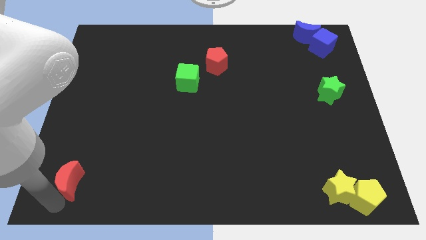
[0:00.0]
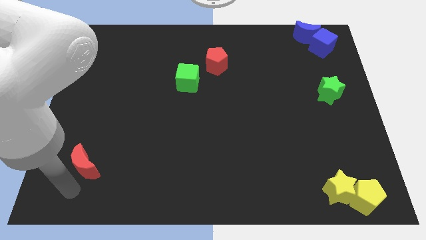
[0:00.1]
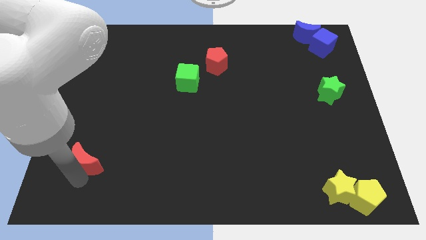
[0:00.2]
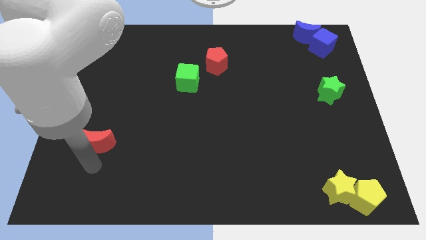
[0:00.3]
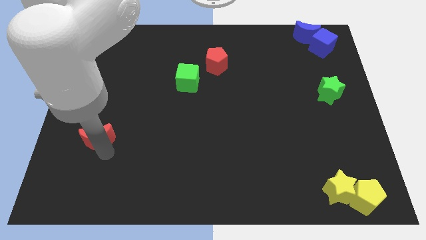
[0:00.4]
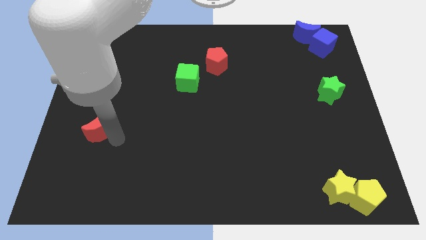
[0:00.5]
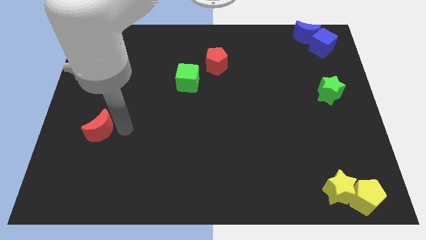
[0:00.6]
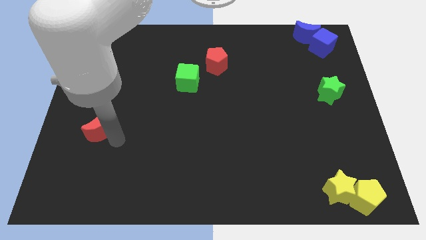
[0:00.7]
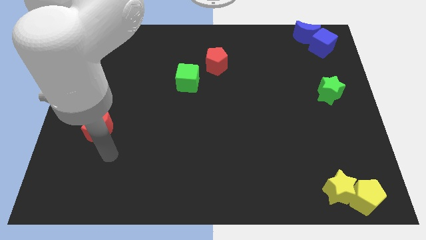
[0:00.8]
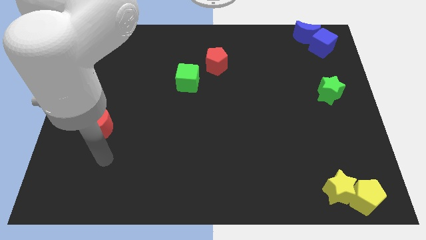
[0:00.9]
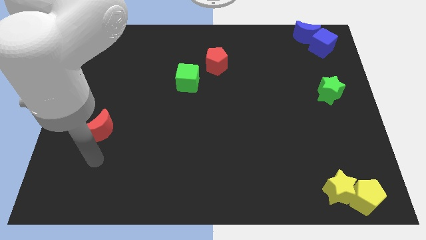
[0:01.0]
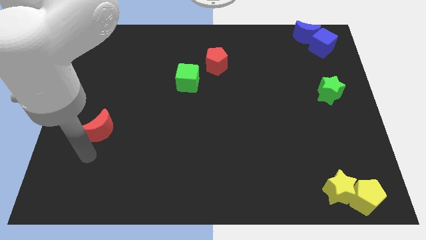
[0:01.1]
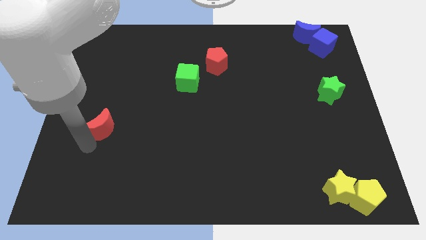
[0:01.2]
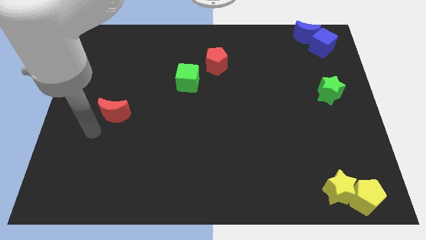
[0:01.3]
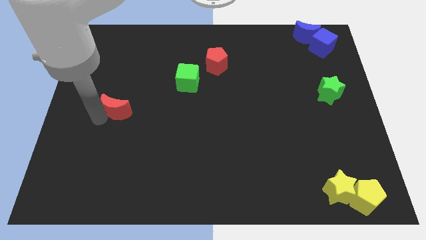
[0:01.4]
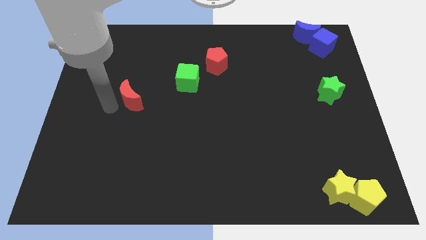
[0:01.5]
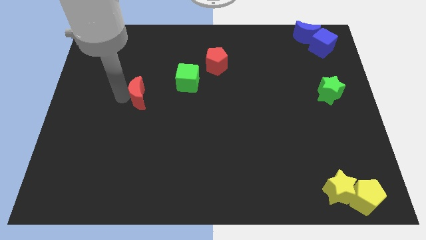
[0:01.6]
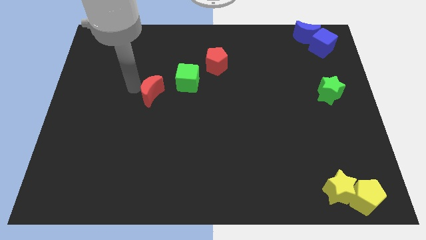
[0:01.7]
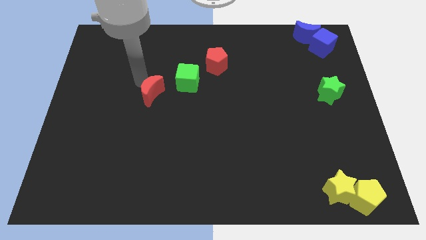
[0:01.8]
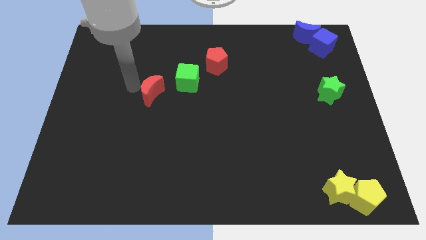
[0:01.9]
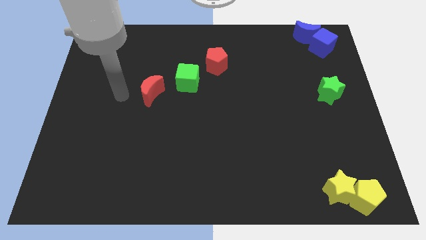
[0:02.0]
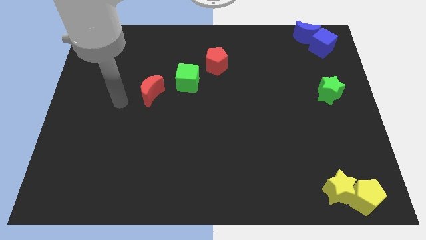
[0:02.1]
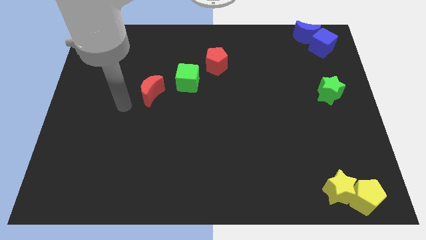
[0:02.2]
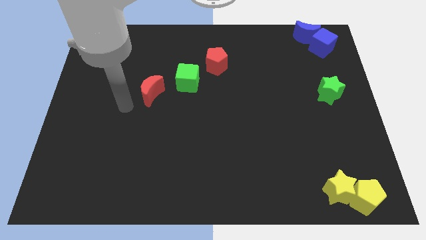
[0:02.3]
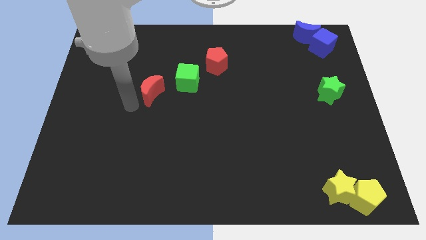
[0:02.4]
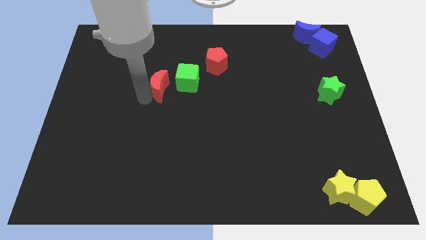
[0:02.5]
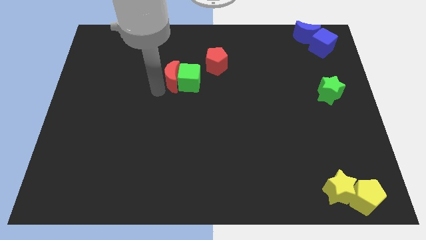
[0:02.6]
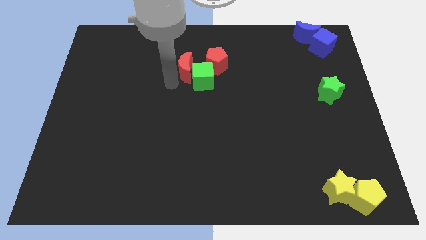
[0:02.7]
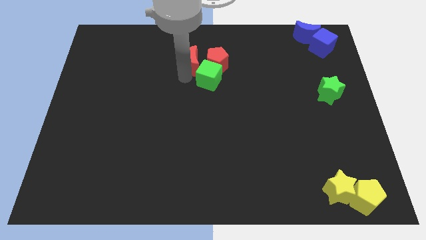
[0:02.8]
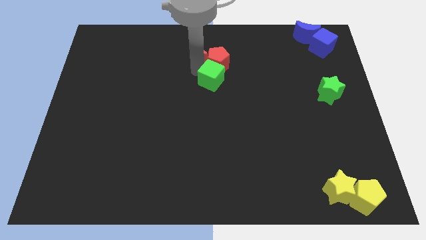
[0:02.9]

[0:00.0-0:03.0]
move the red crescent into the red pentagon

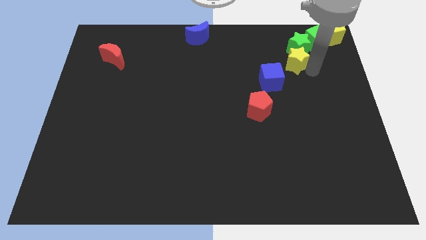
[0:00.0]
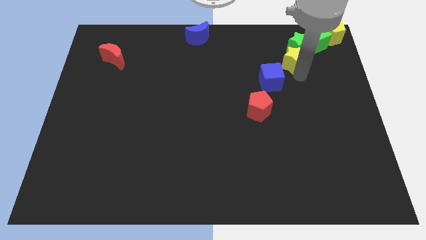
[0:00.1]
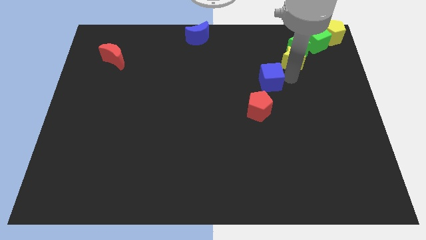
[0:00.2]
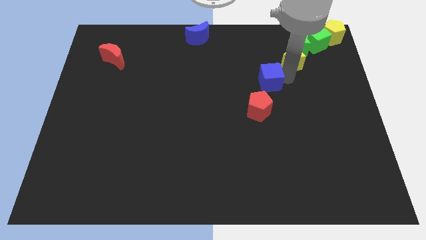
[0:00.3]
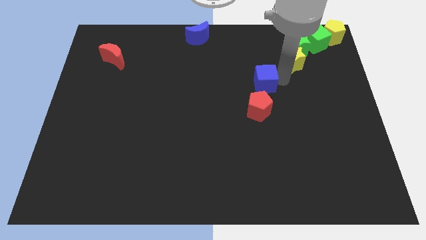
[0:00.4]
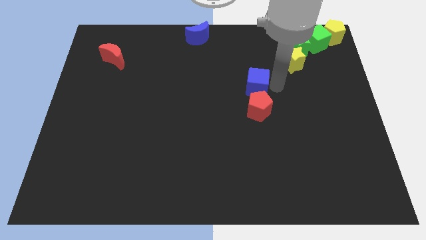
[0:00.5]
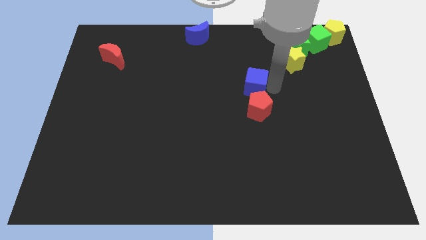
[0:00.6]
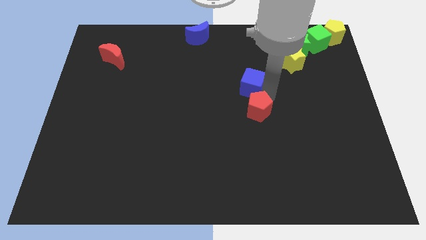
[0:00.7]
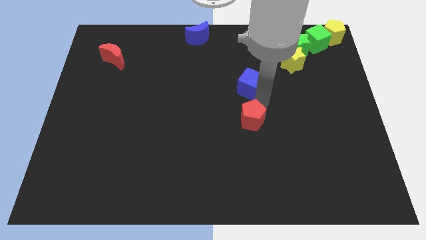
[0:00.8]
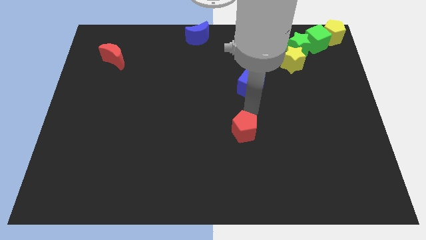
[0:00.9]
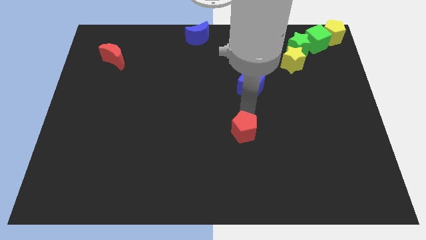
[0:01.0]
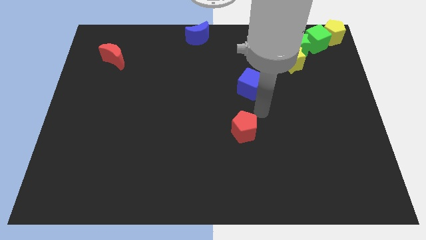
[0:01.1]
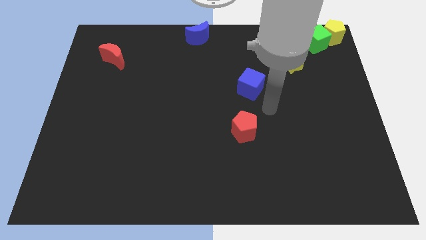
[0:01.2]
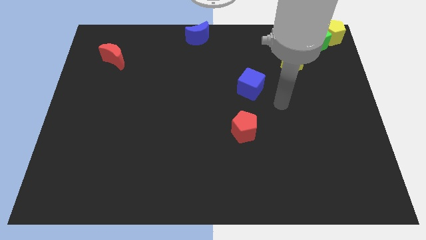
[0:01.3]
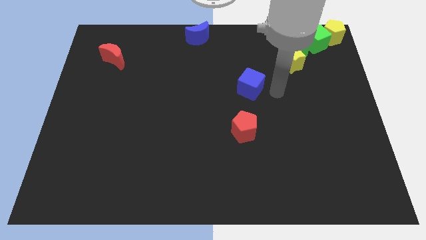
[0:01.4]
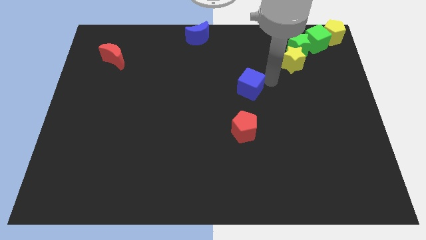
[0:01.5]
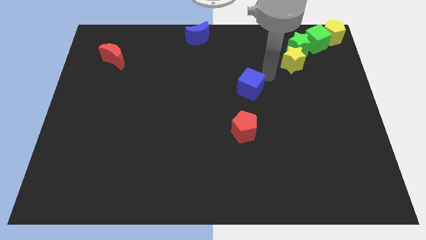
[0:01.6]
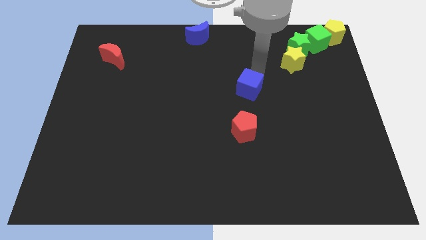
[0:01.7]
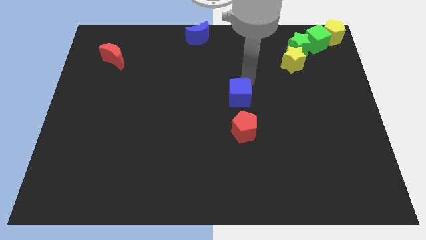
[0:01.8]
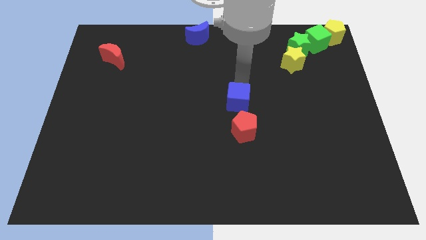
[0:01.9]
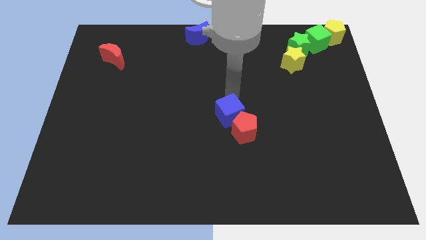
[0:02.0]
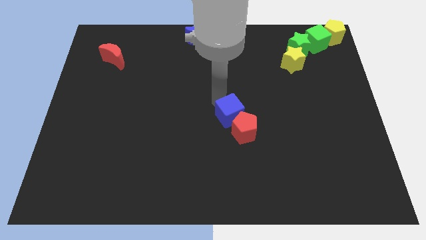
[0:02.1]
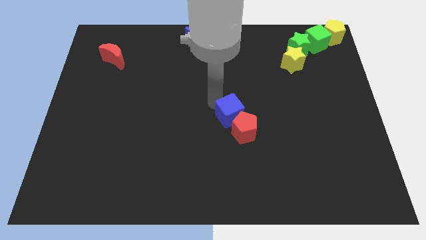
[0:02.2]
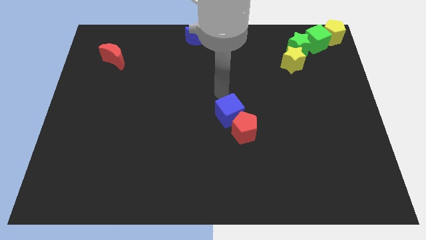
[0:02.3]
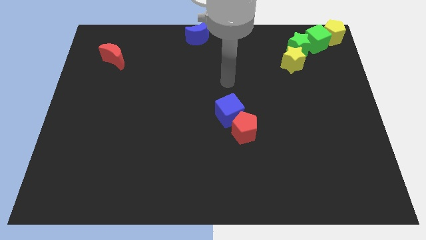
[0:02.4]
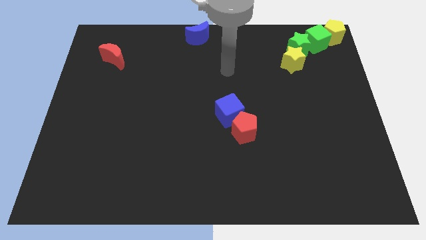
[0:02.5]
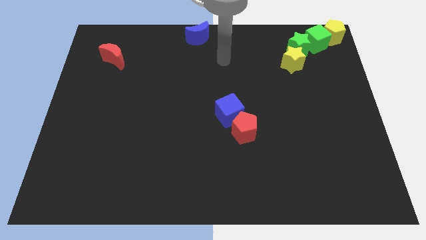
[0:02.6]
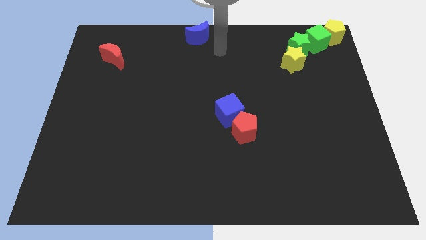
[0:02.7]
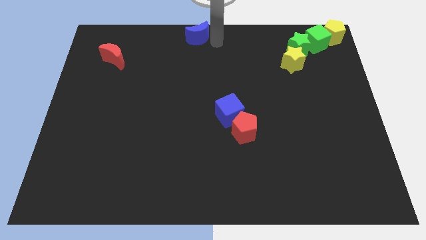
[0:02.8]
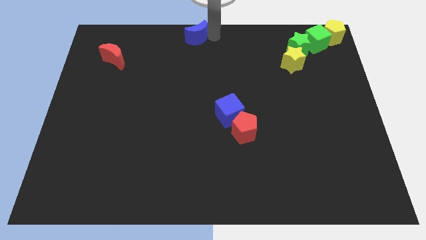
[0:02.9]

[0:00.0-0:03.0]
push the red pentagon and the blue cube to the bottom side of the board

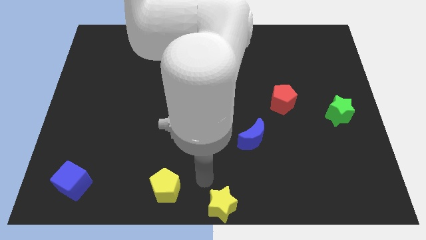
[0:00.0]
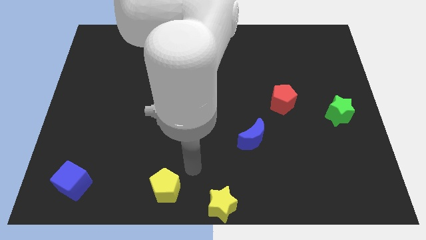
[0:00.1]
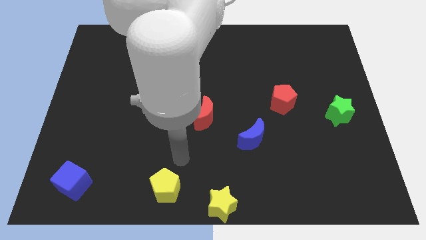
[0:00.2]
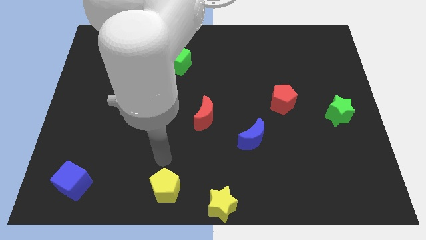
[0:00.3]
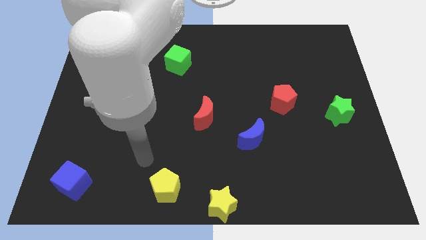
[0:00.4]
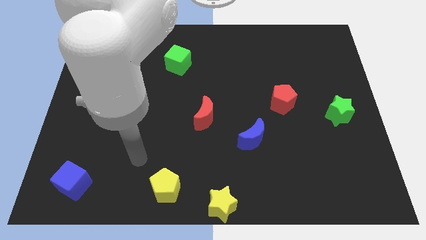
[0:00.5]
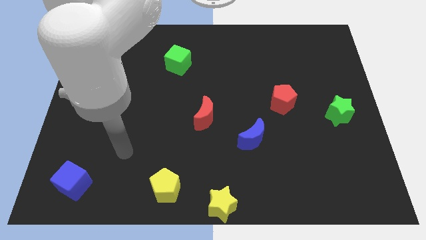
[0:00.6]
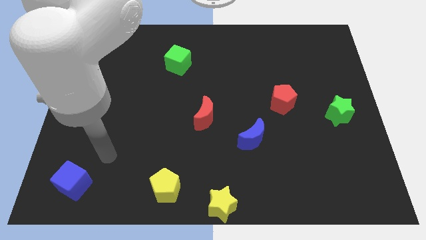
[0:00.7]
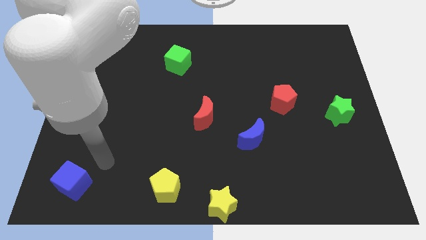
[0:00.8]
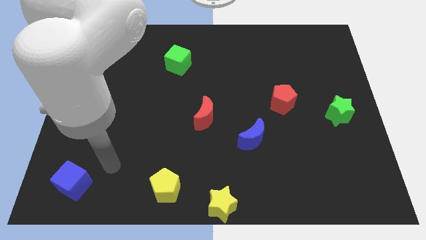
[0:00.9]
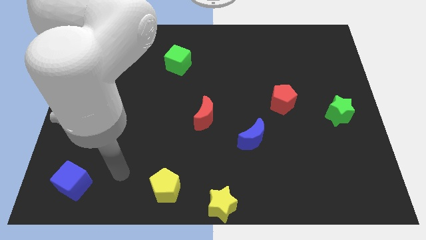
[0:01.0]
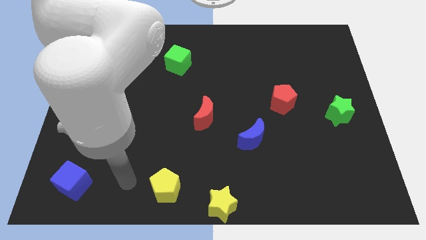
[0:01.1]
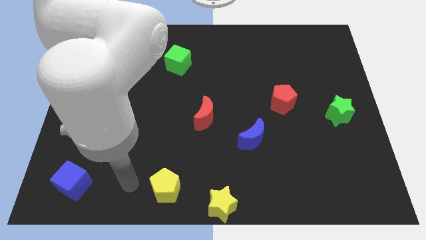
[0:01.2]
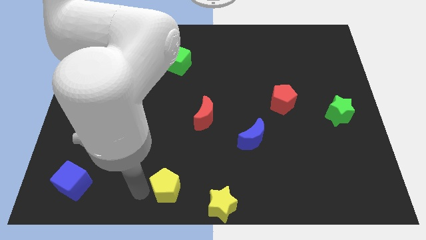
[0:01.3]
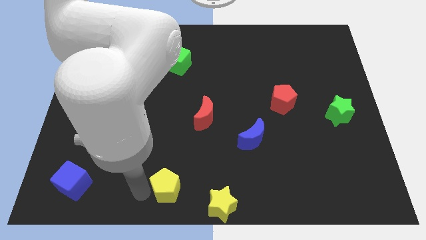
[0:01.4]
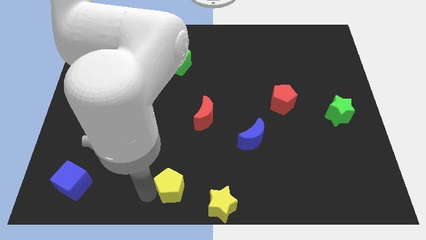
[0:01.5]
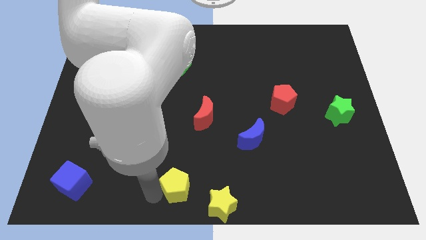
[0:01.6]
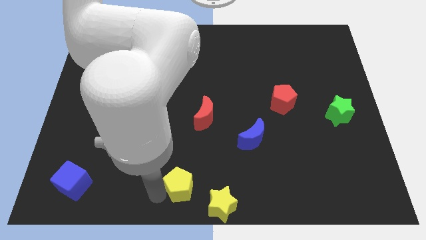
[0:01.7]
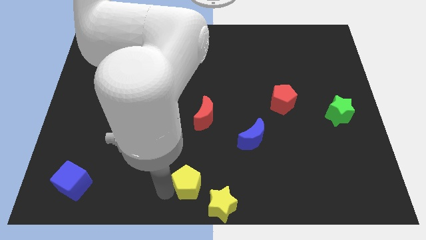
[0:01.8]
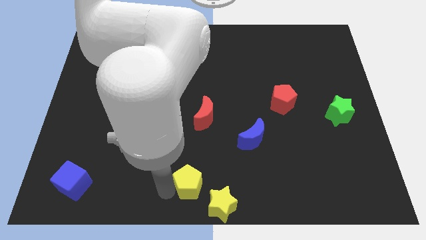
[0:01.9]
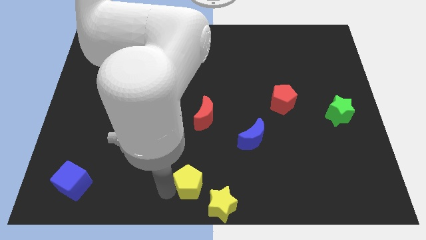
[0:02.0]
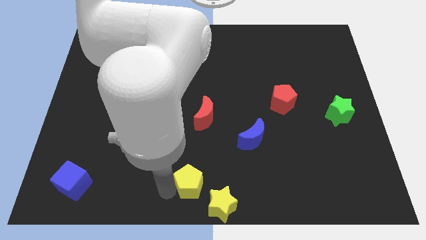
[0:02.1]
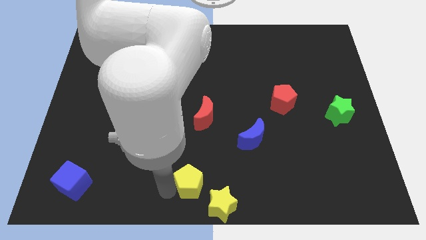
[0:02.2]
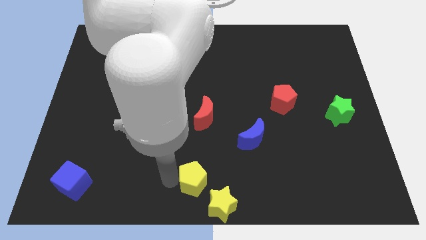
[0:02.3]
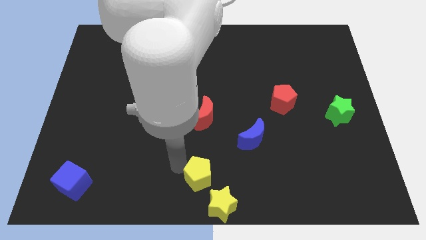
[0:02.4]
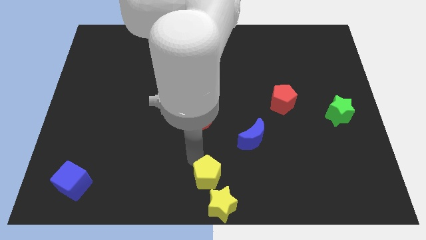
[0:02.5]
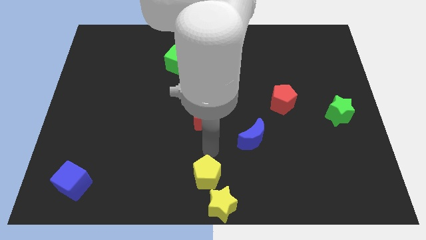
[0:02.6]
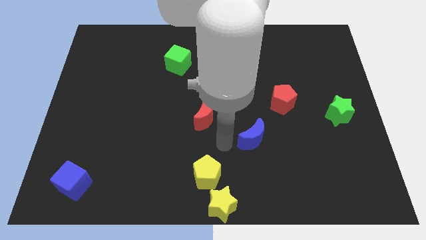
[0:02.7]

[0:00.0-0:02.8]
move the yellow pentagon to the top left side of the yellow star

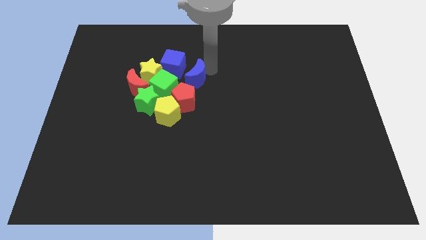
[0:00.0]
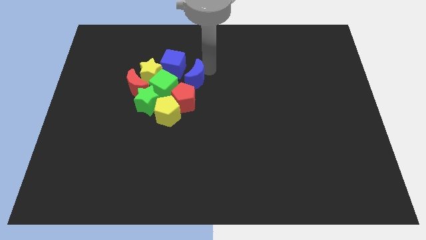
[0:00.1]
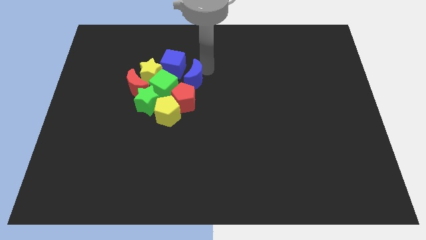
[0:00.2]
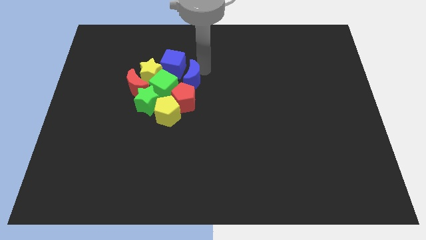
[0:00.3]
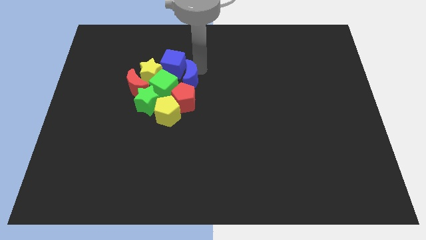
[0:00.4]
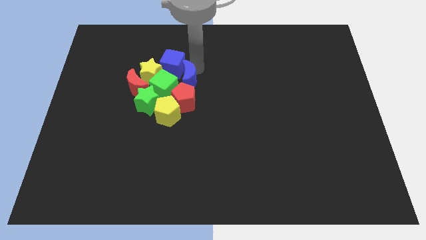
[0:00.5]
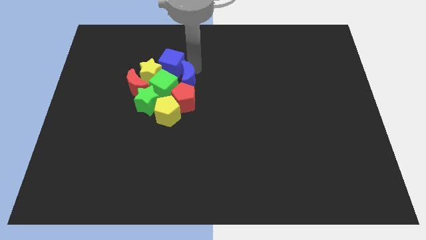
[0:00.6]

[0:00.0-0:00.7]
push the blue crescent into the blue cube
